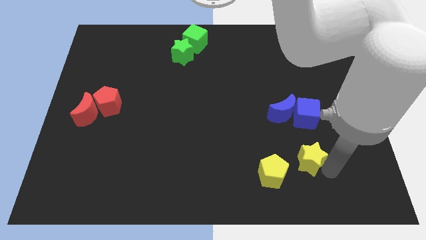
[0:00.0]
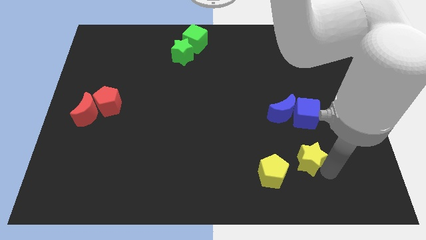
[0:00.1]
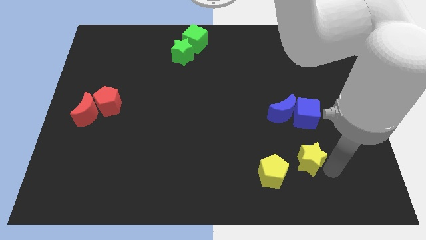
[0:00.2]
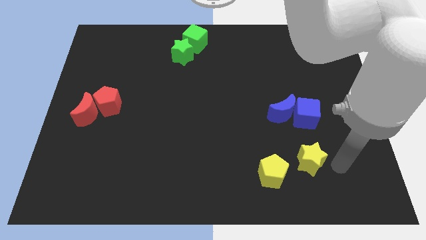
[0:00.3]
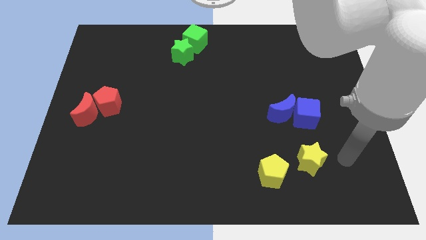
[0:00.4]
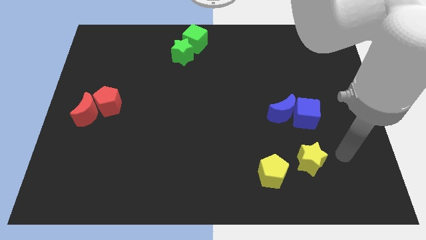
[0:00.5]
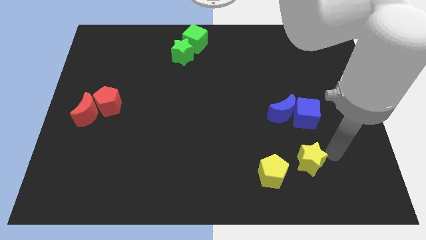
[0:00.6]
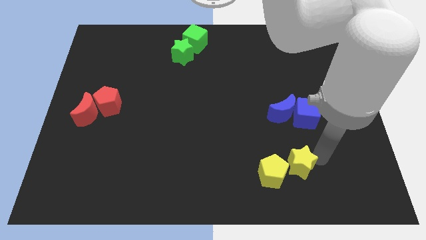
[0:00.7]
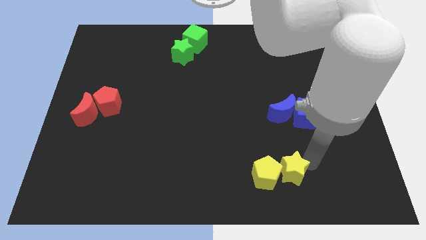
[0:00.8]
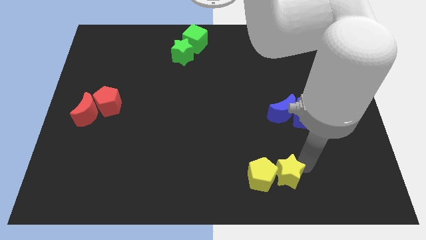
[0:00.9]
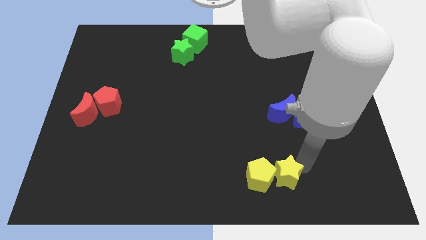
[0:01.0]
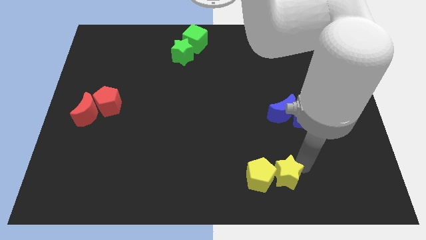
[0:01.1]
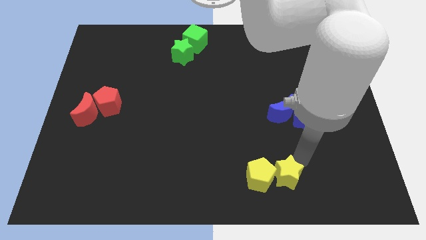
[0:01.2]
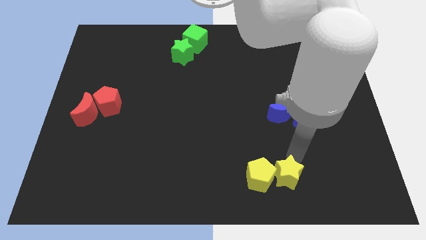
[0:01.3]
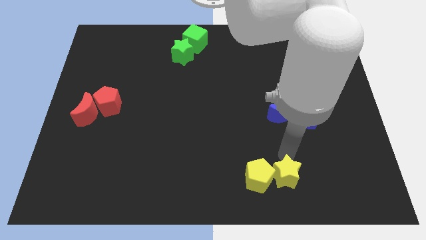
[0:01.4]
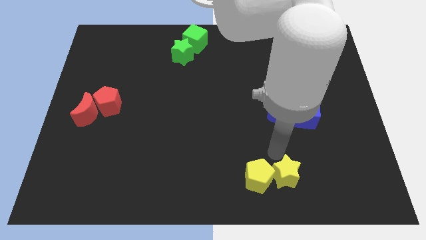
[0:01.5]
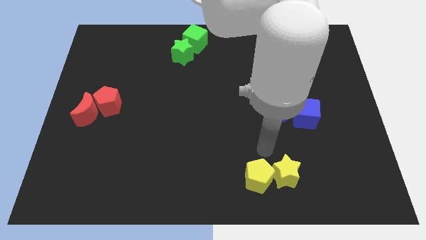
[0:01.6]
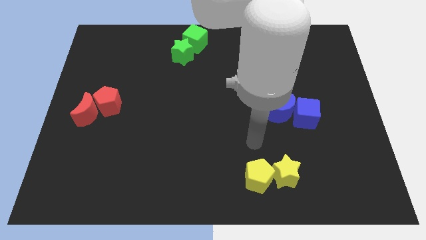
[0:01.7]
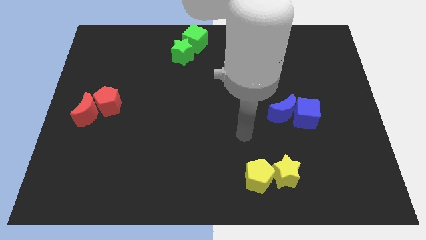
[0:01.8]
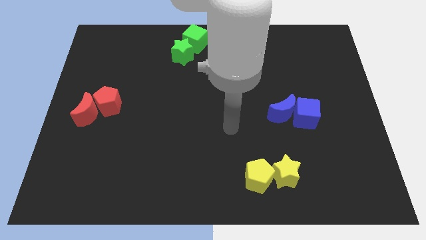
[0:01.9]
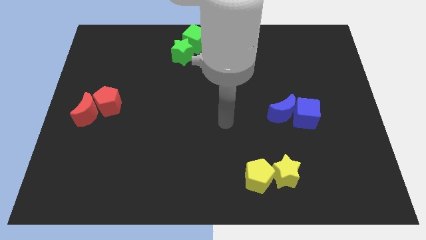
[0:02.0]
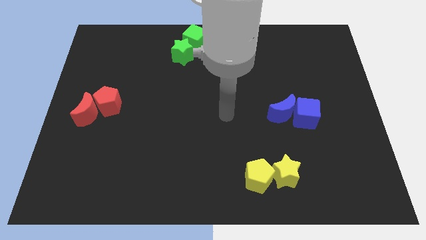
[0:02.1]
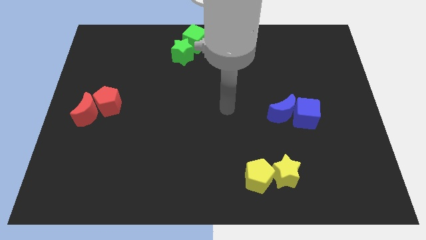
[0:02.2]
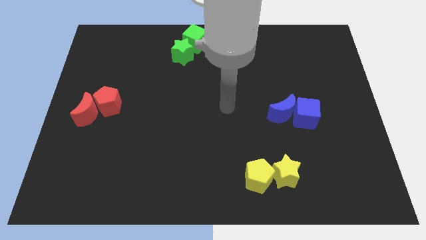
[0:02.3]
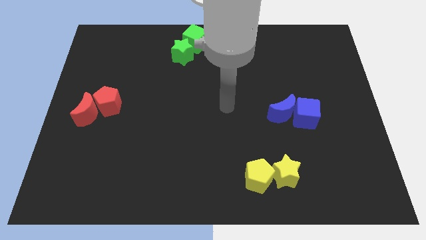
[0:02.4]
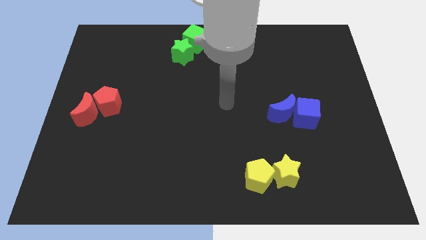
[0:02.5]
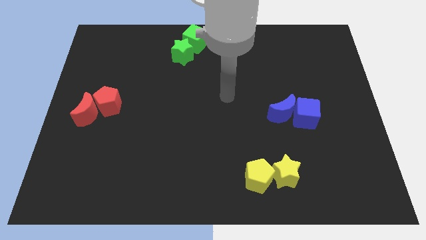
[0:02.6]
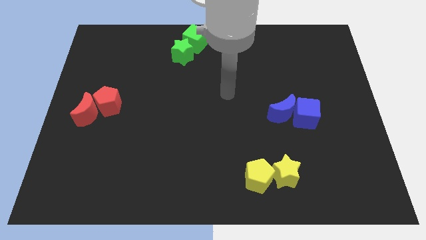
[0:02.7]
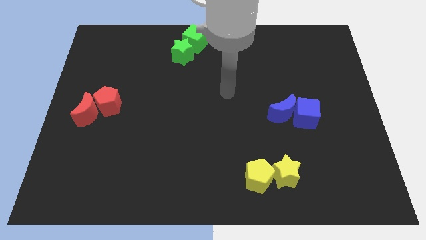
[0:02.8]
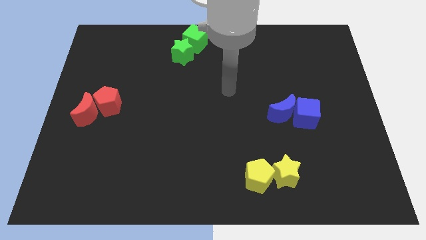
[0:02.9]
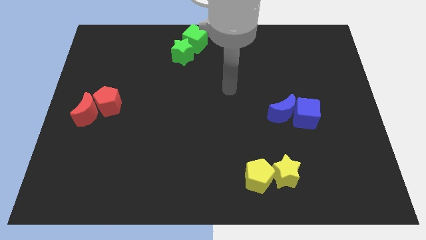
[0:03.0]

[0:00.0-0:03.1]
move your arm away from yellow blocks

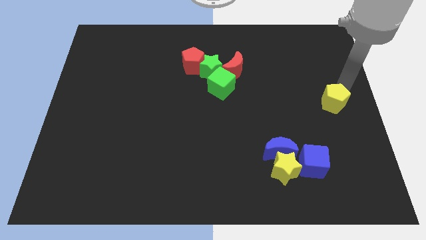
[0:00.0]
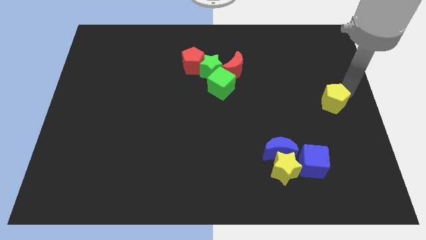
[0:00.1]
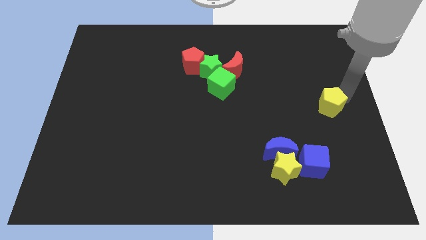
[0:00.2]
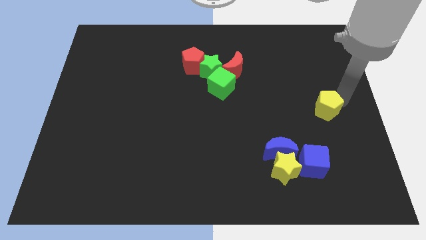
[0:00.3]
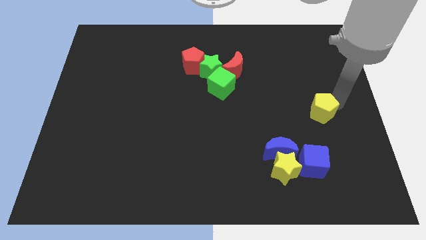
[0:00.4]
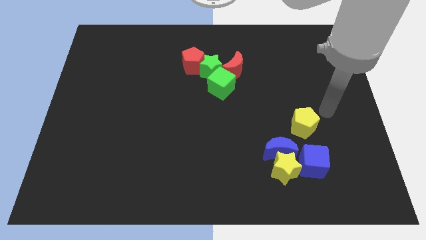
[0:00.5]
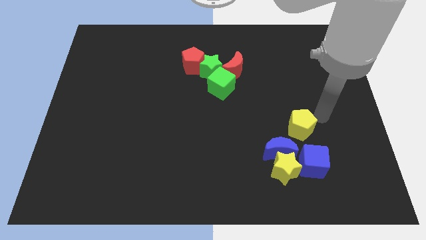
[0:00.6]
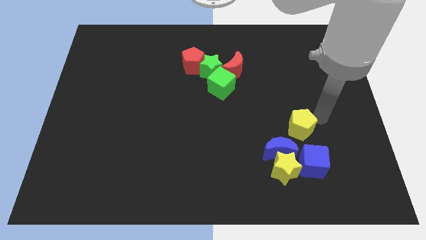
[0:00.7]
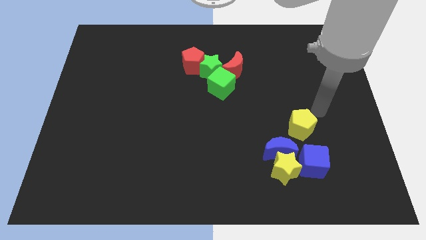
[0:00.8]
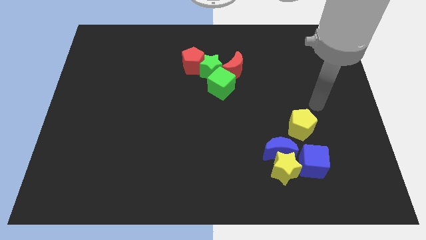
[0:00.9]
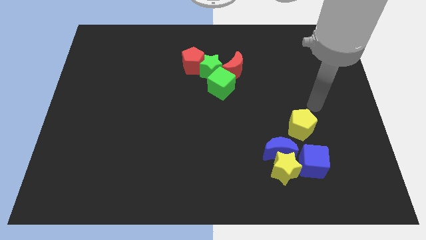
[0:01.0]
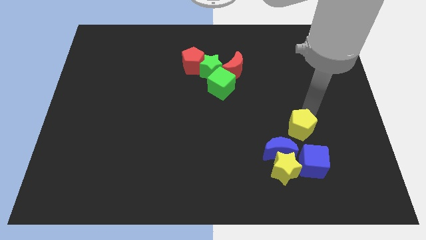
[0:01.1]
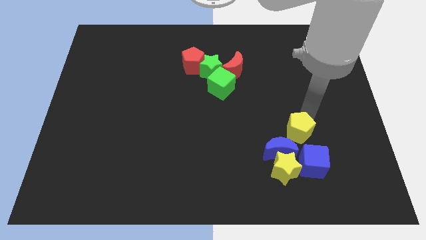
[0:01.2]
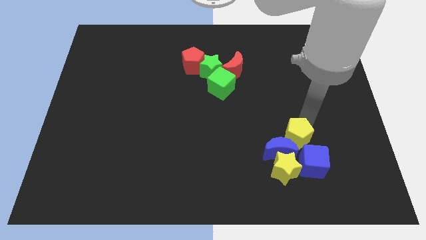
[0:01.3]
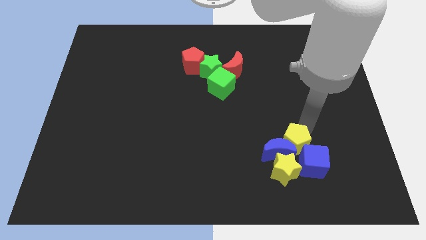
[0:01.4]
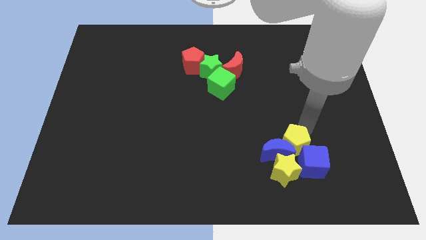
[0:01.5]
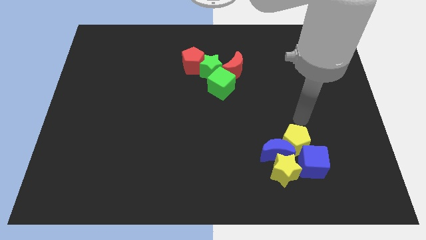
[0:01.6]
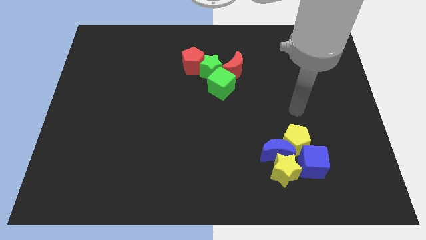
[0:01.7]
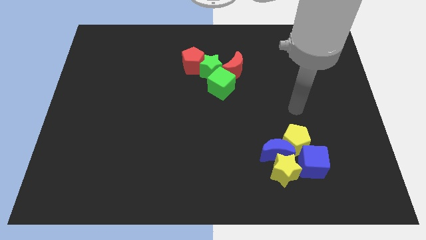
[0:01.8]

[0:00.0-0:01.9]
push the yellow pentagon into the blue crescent

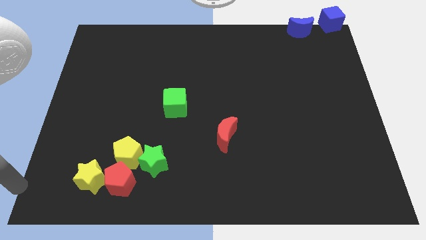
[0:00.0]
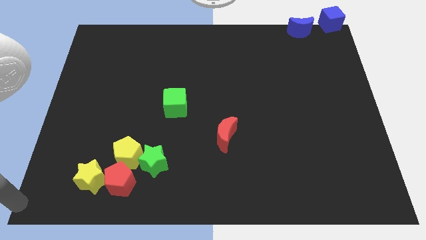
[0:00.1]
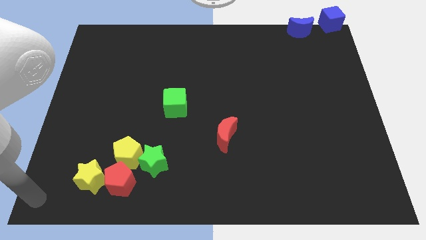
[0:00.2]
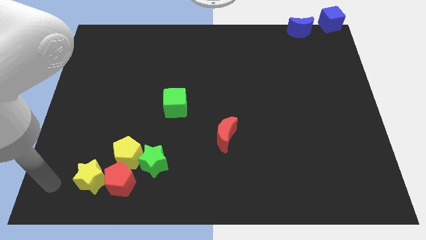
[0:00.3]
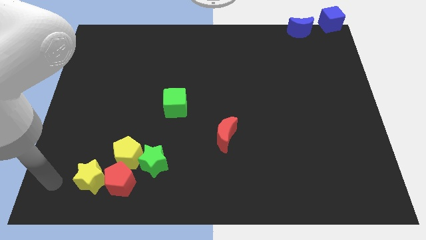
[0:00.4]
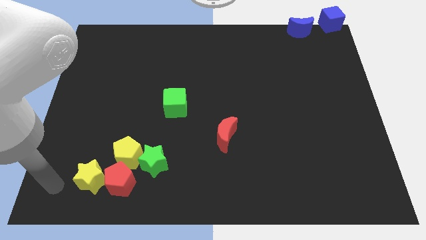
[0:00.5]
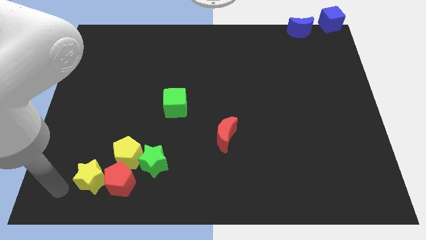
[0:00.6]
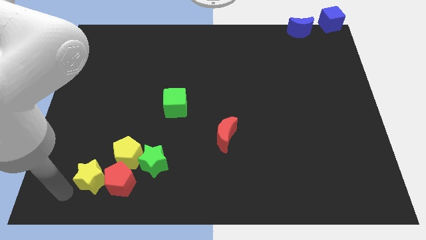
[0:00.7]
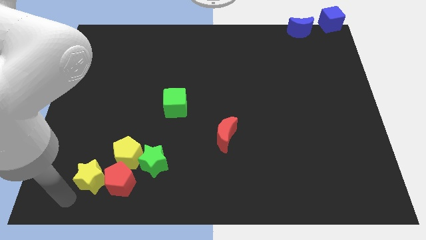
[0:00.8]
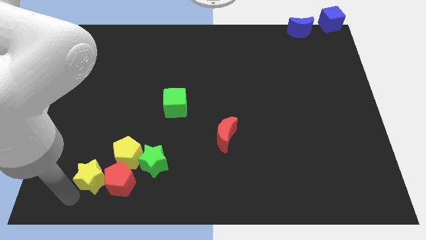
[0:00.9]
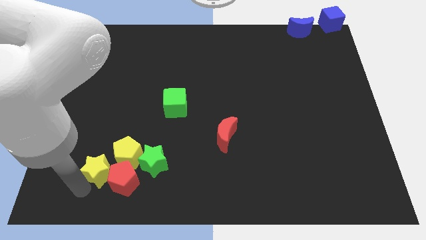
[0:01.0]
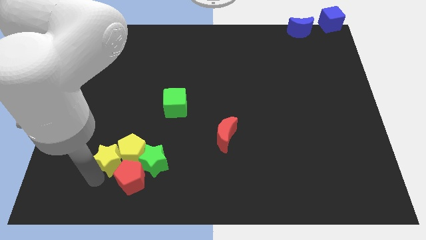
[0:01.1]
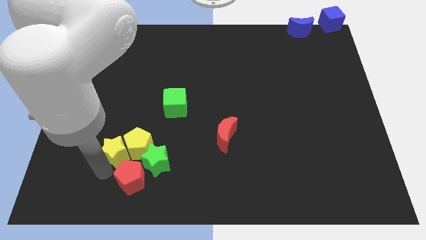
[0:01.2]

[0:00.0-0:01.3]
move the yellow star into the yellow pentagon

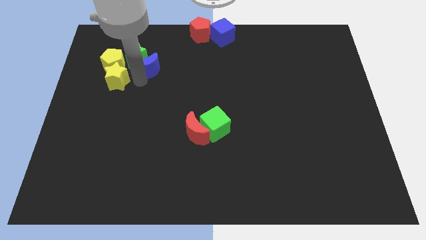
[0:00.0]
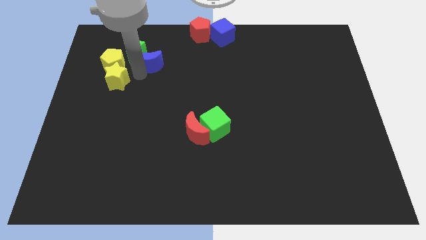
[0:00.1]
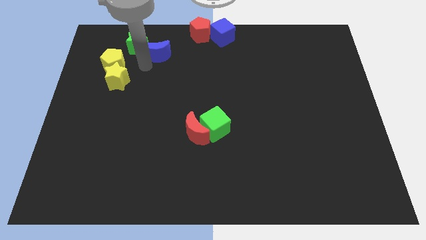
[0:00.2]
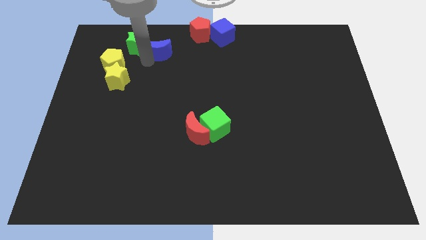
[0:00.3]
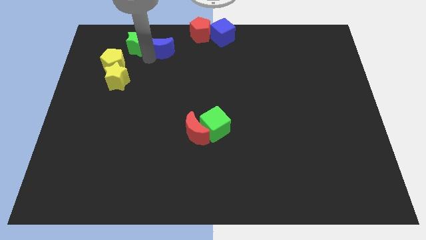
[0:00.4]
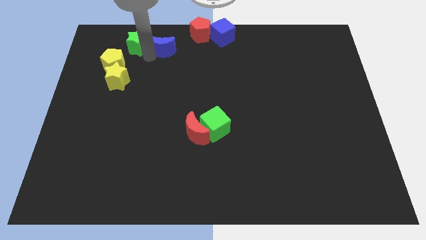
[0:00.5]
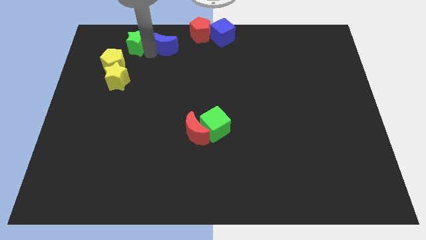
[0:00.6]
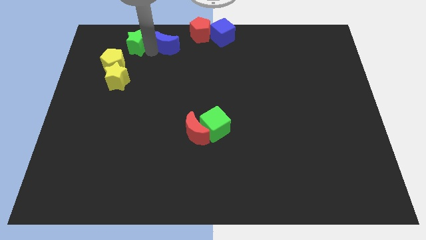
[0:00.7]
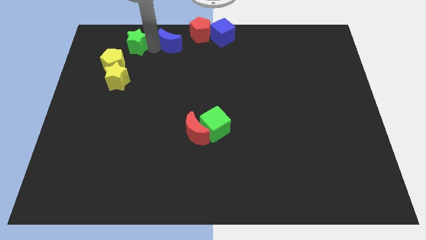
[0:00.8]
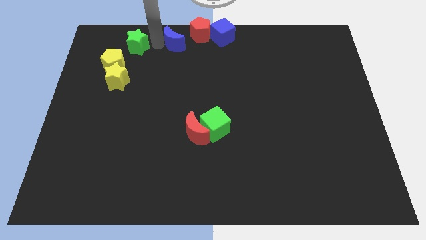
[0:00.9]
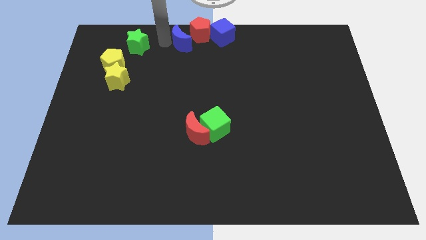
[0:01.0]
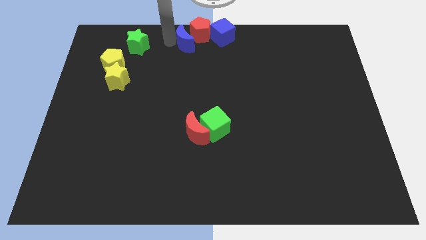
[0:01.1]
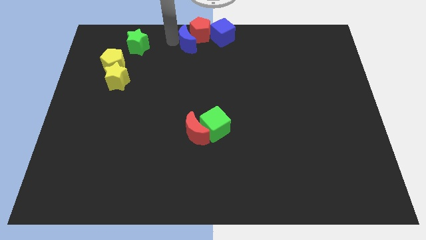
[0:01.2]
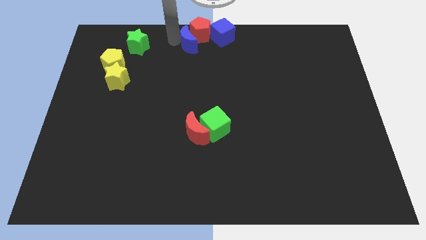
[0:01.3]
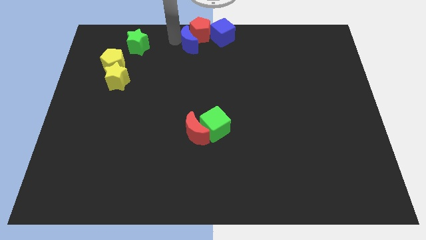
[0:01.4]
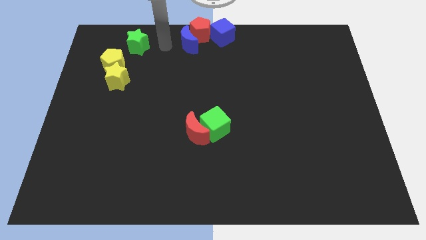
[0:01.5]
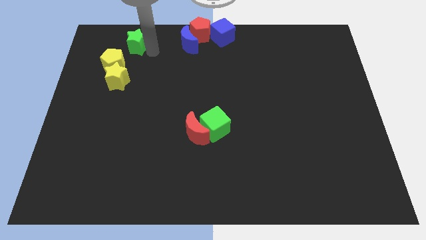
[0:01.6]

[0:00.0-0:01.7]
place the yellow moon to the left of the red pentagon

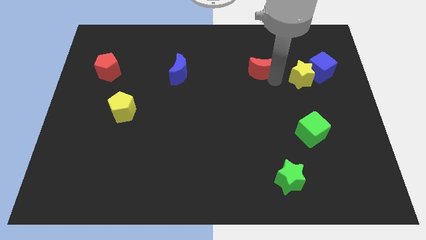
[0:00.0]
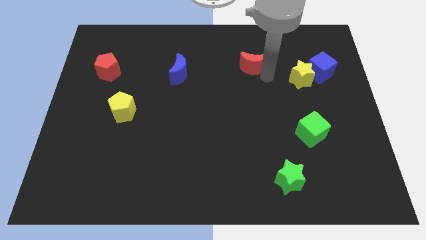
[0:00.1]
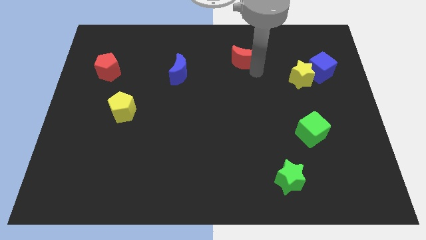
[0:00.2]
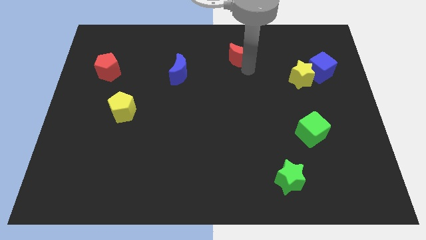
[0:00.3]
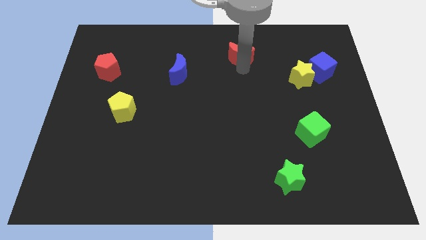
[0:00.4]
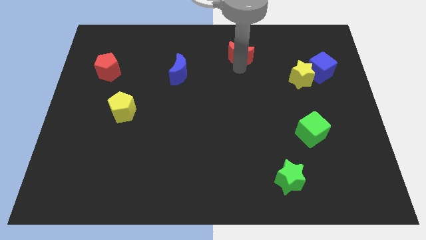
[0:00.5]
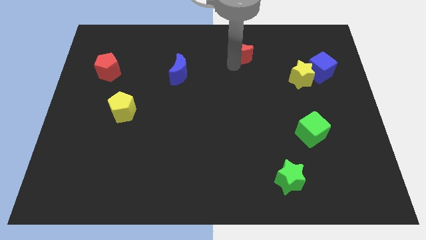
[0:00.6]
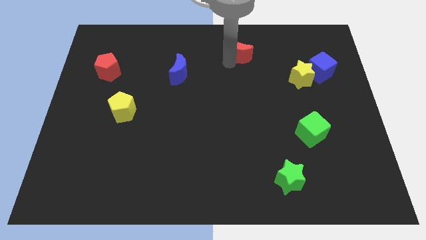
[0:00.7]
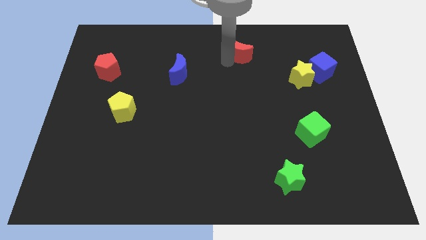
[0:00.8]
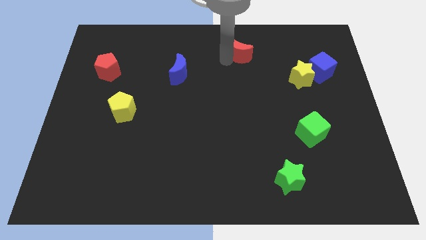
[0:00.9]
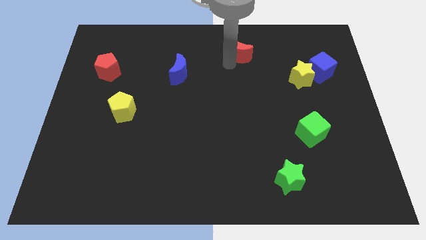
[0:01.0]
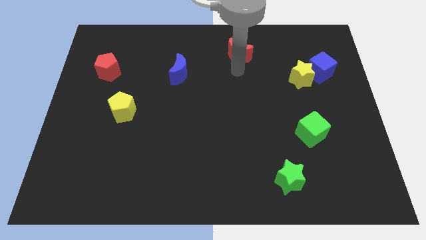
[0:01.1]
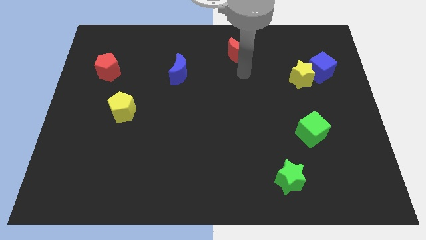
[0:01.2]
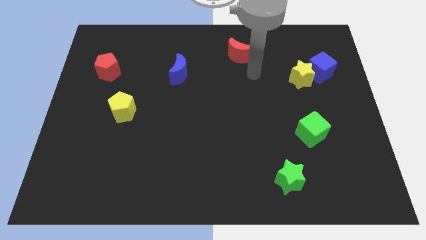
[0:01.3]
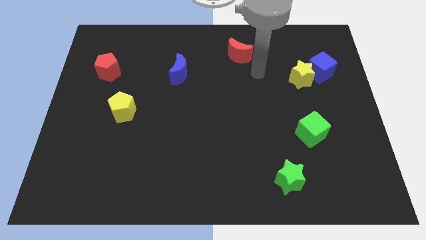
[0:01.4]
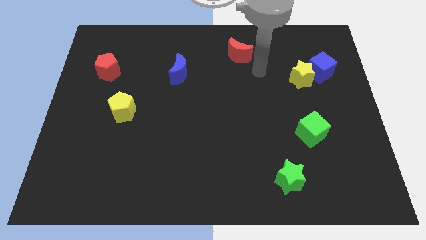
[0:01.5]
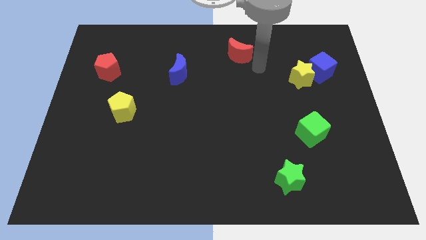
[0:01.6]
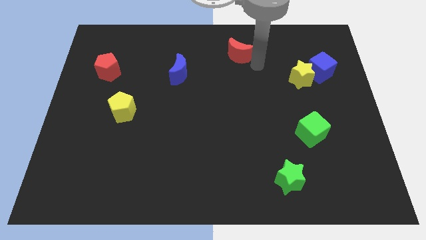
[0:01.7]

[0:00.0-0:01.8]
push the red crescent towards the top center of the board
